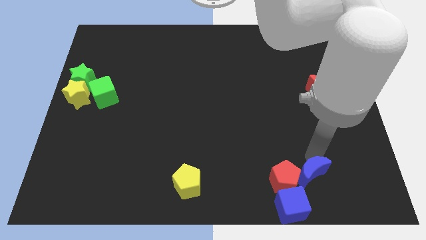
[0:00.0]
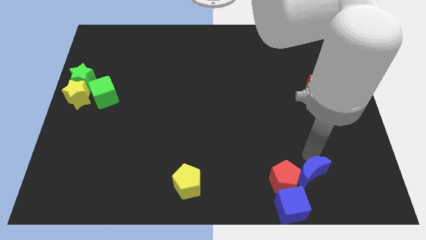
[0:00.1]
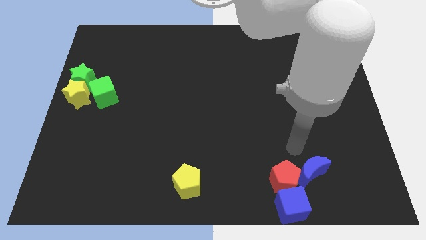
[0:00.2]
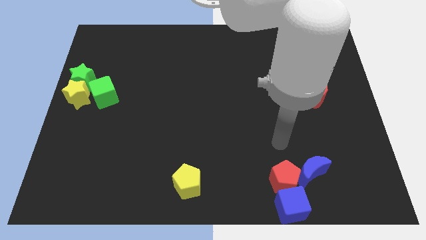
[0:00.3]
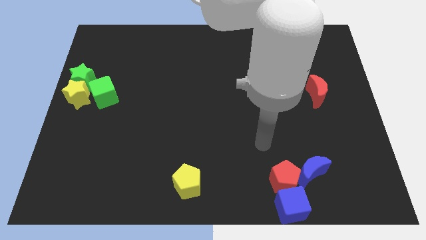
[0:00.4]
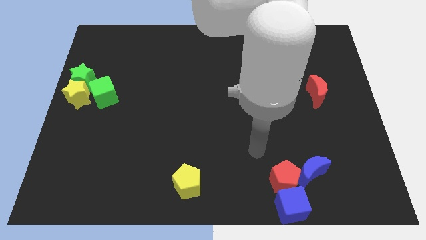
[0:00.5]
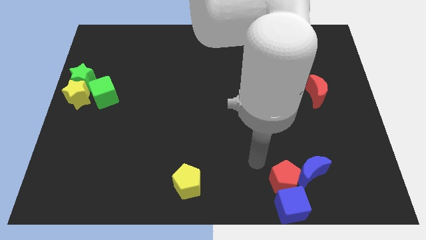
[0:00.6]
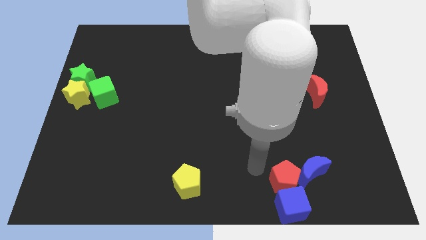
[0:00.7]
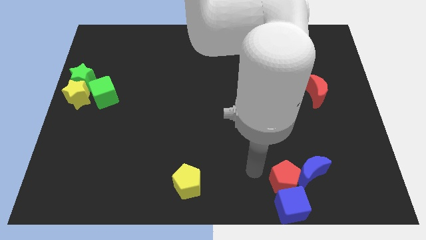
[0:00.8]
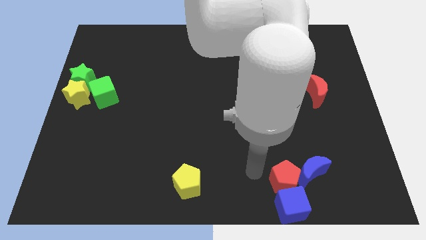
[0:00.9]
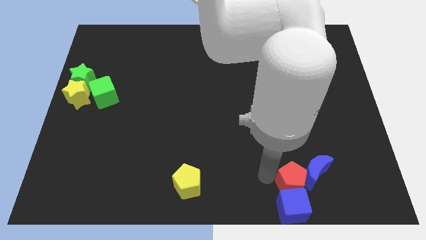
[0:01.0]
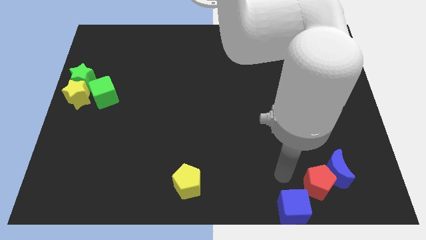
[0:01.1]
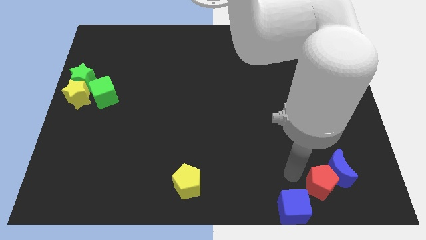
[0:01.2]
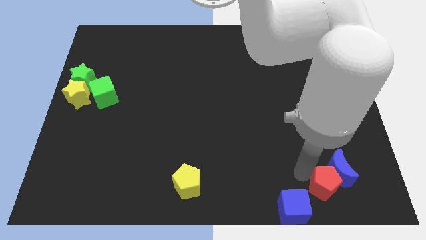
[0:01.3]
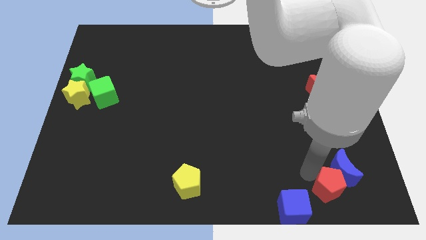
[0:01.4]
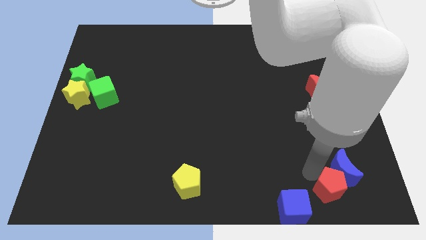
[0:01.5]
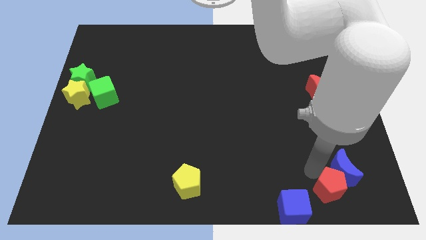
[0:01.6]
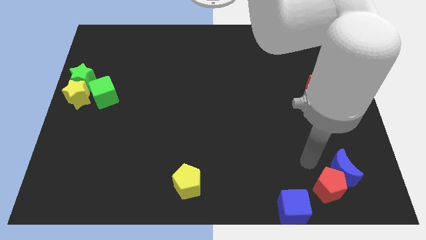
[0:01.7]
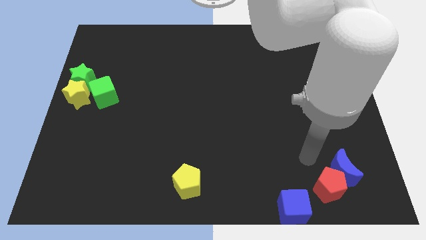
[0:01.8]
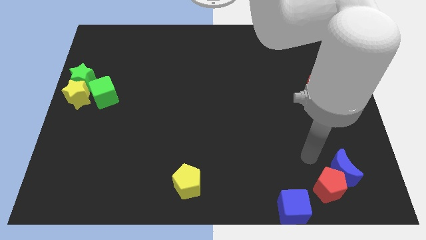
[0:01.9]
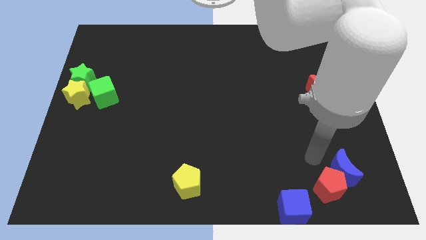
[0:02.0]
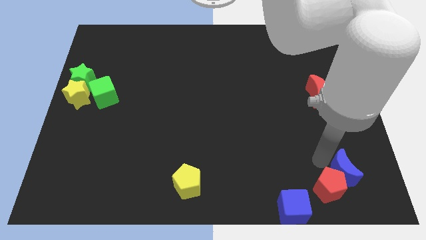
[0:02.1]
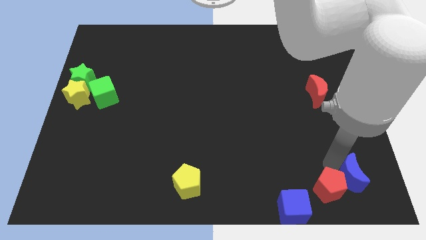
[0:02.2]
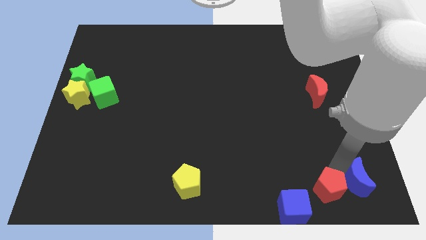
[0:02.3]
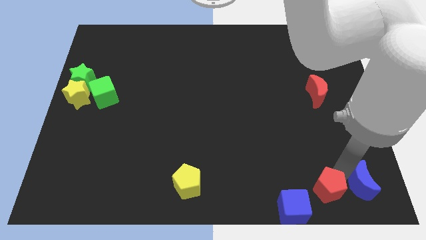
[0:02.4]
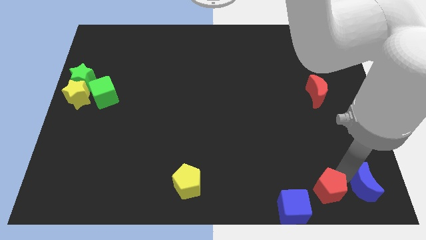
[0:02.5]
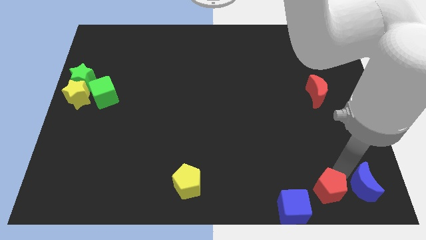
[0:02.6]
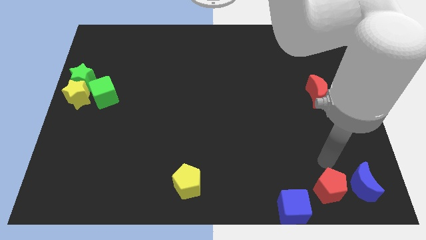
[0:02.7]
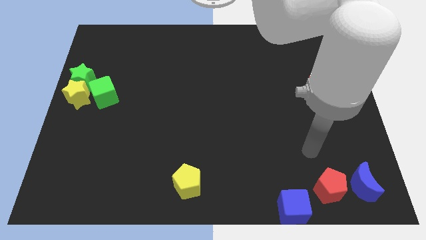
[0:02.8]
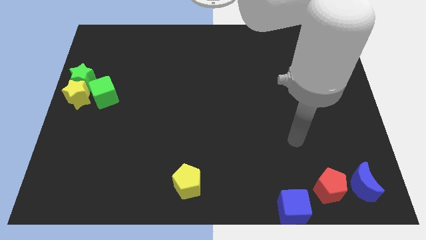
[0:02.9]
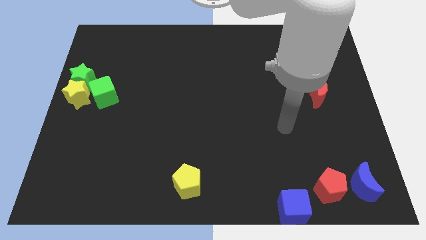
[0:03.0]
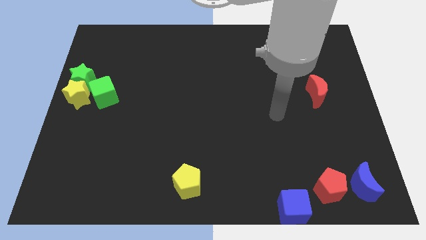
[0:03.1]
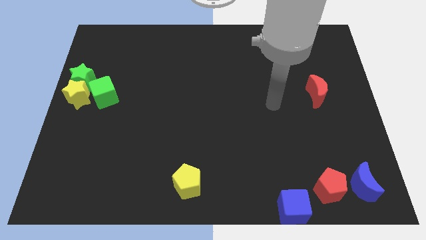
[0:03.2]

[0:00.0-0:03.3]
separate the red pentagon and blue moon from the top side of the blue cube

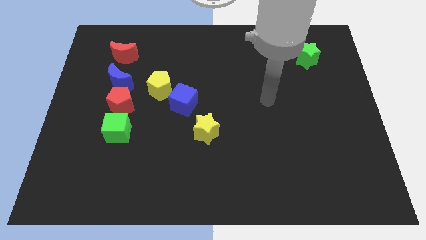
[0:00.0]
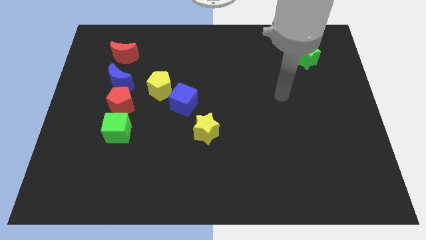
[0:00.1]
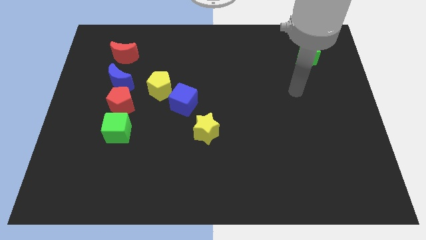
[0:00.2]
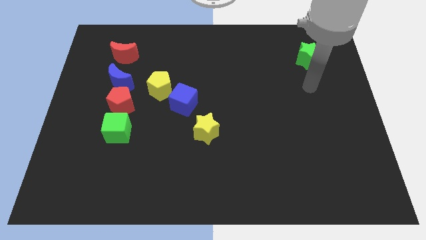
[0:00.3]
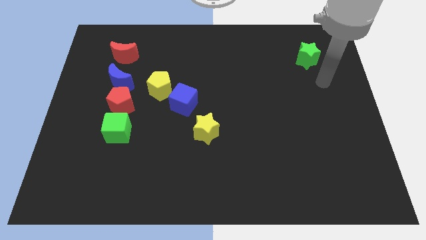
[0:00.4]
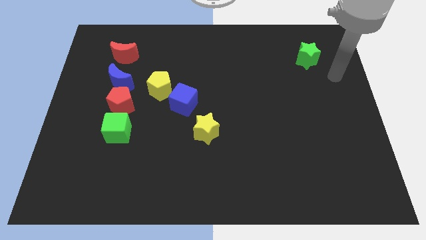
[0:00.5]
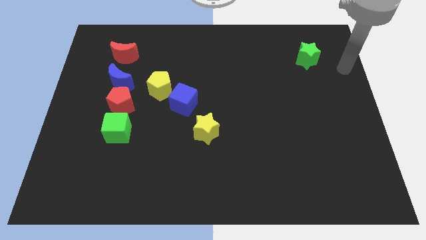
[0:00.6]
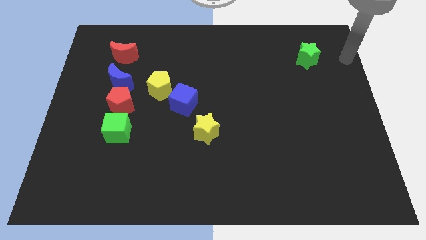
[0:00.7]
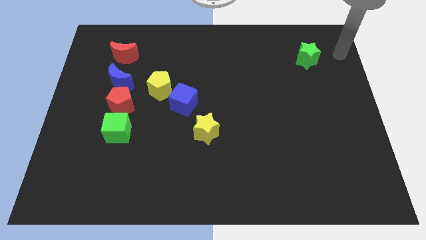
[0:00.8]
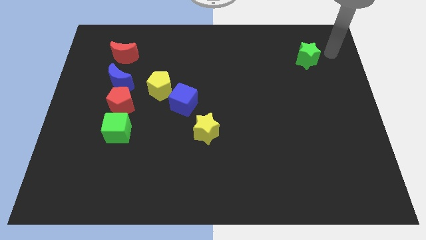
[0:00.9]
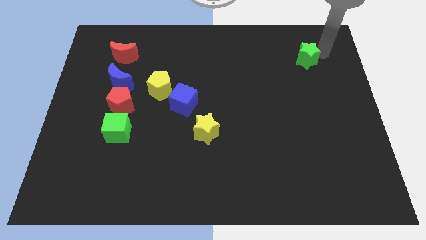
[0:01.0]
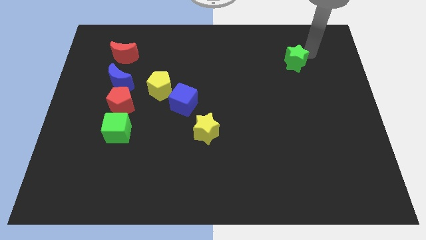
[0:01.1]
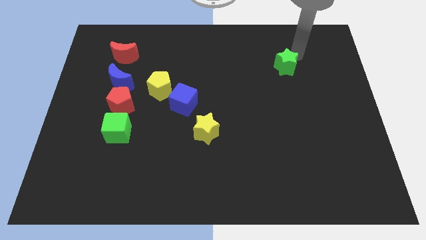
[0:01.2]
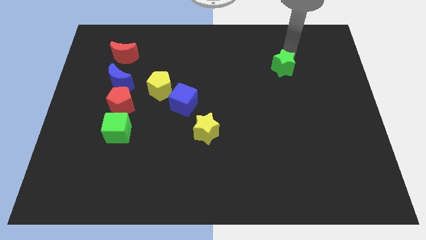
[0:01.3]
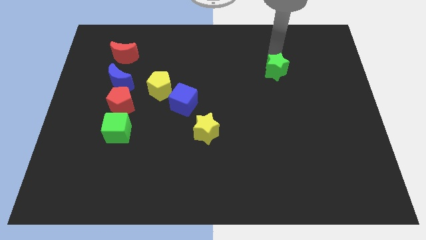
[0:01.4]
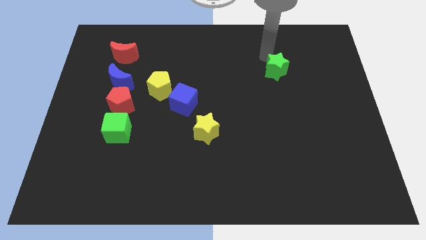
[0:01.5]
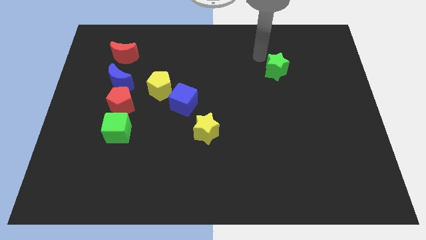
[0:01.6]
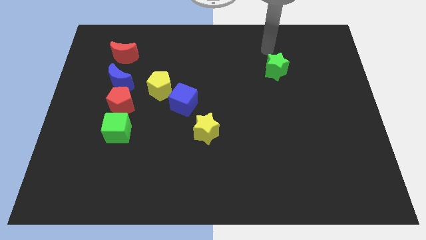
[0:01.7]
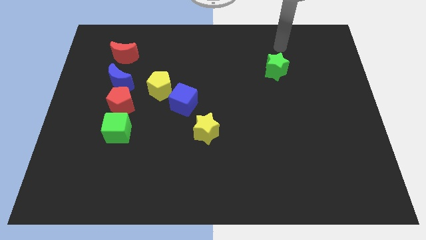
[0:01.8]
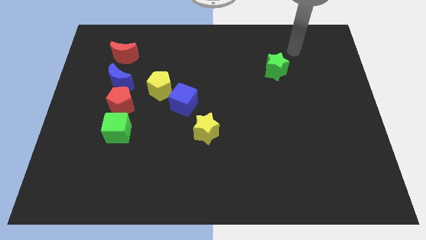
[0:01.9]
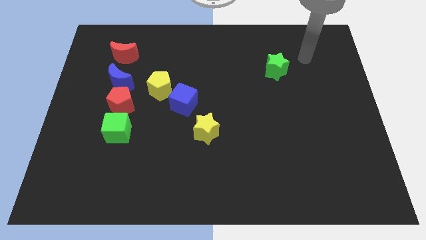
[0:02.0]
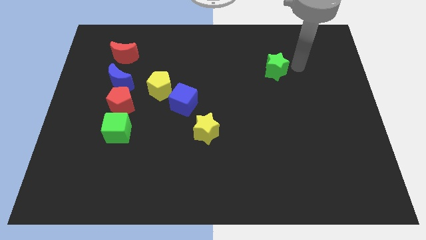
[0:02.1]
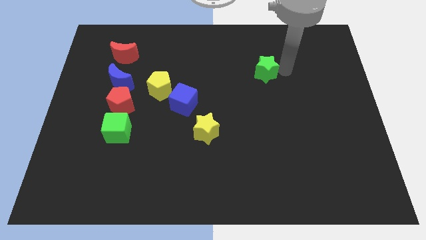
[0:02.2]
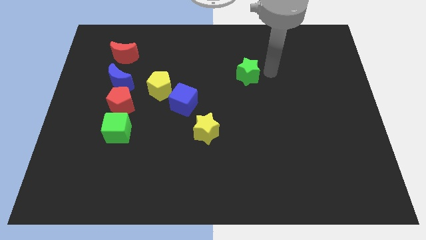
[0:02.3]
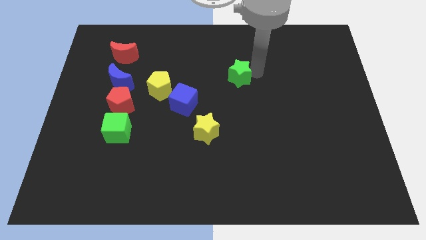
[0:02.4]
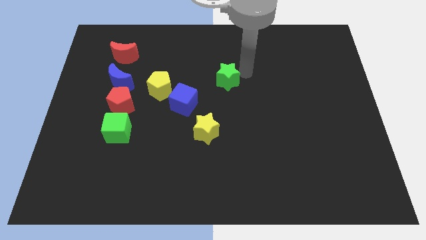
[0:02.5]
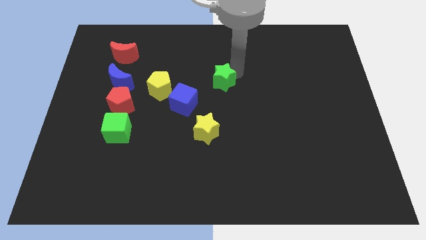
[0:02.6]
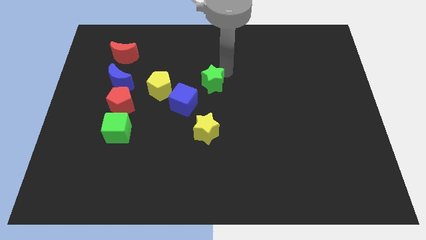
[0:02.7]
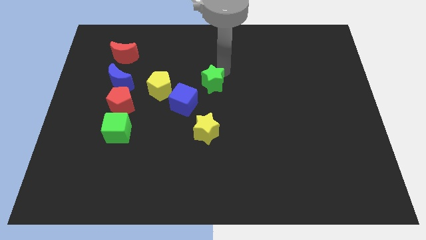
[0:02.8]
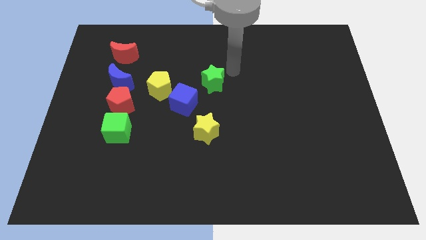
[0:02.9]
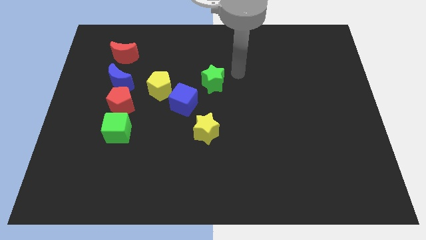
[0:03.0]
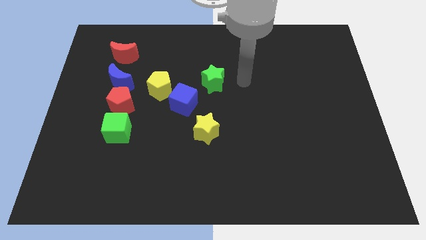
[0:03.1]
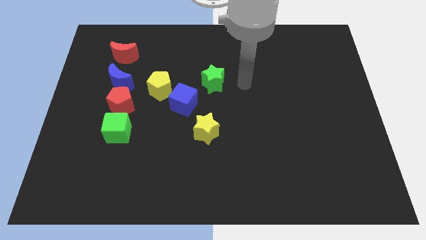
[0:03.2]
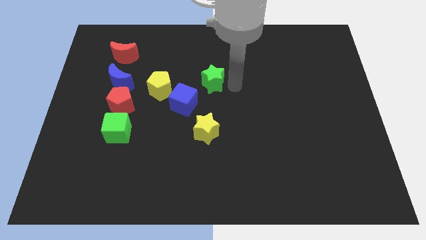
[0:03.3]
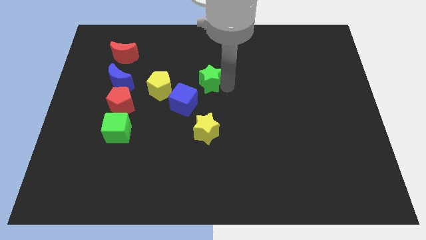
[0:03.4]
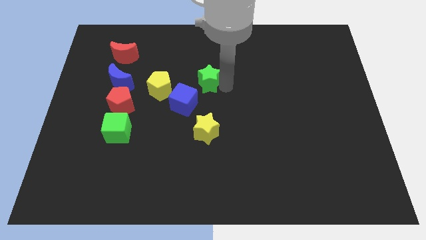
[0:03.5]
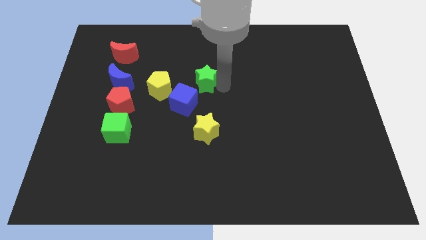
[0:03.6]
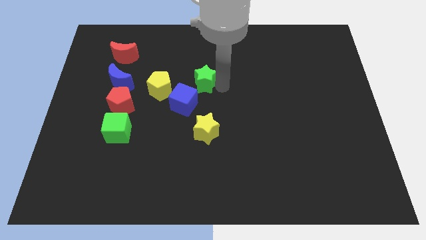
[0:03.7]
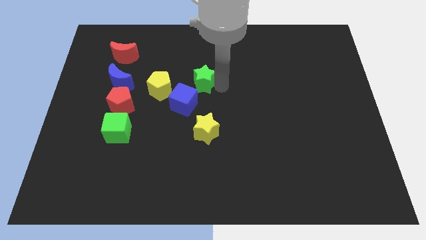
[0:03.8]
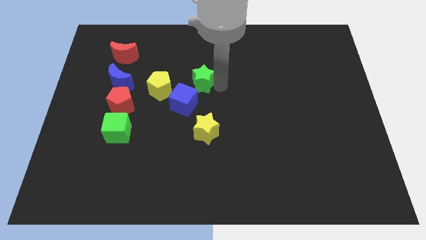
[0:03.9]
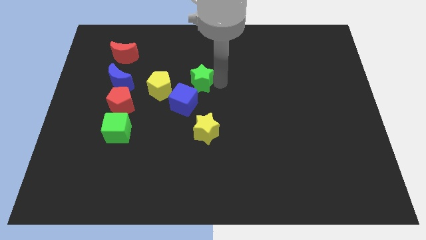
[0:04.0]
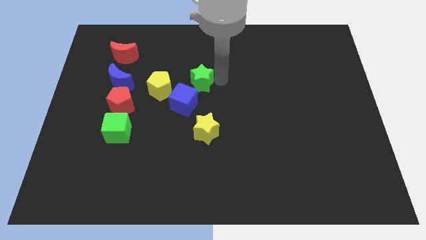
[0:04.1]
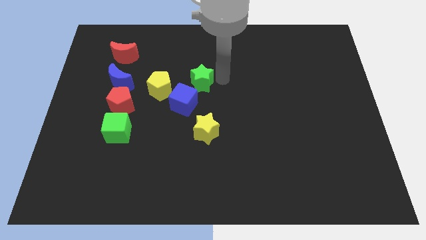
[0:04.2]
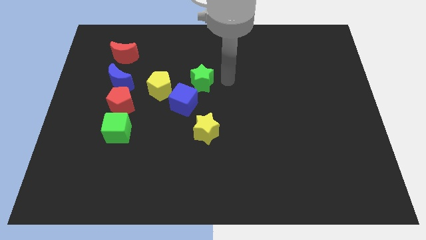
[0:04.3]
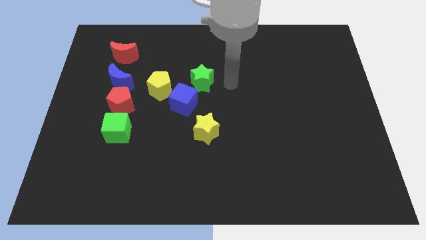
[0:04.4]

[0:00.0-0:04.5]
place the green star above the blue cube

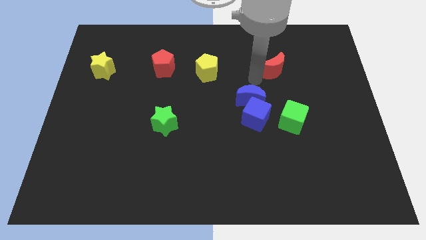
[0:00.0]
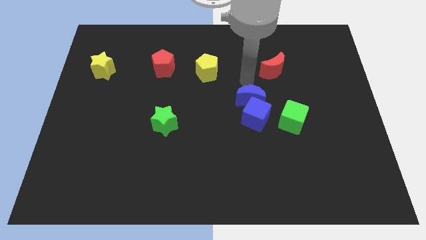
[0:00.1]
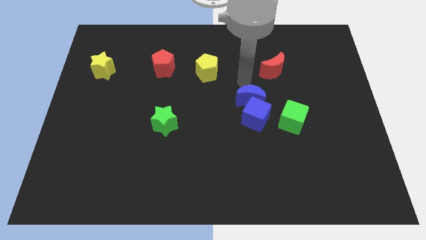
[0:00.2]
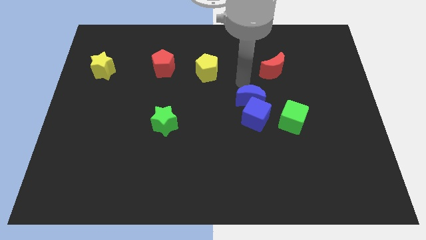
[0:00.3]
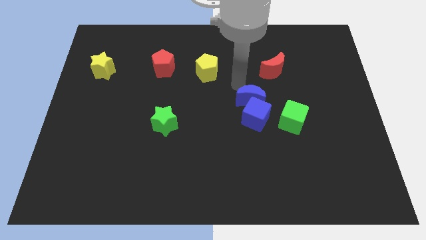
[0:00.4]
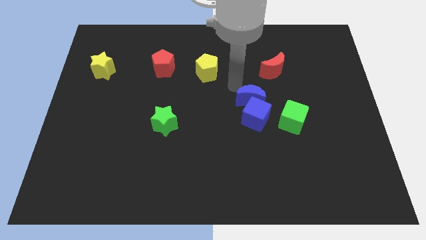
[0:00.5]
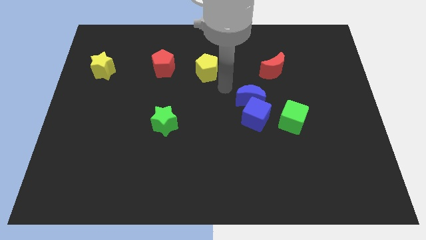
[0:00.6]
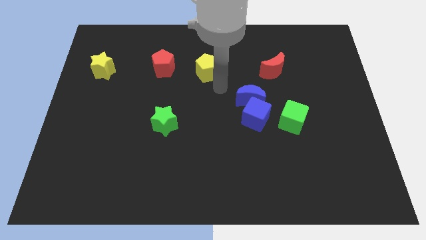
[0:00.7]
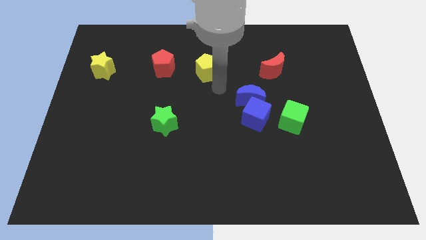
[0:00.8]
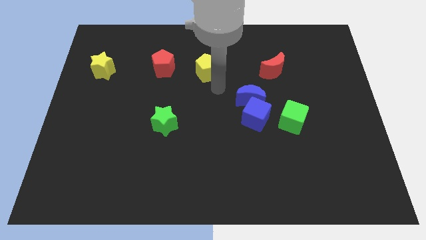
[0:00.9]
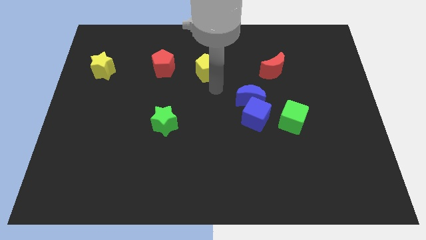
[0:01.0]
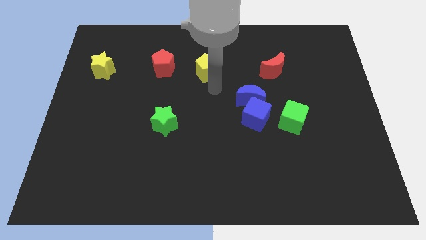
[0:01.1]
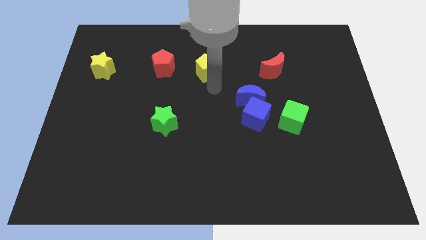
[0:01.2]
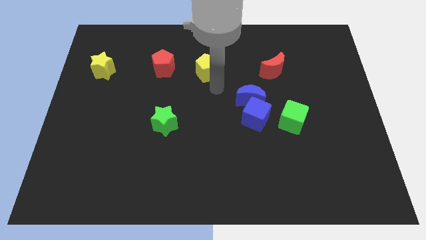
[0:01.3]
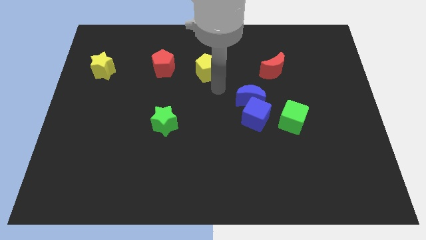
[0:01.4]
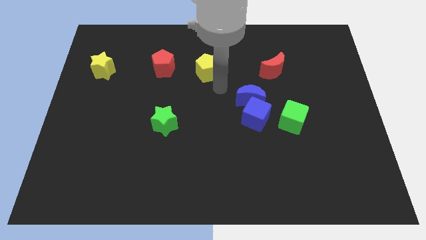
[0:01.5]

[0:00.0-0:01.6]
move your arm away from the red moon
